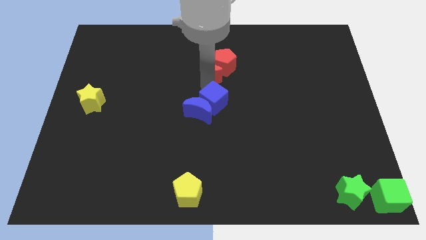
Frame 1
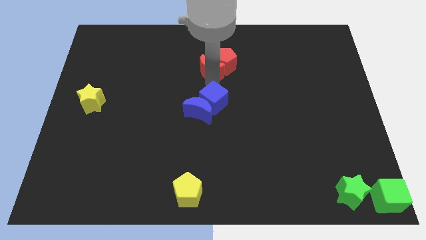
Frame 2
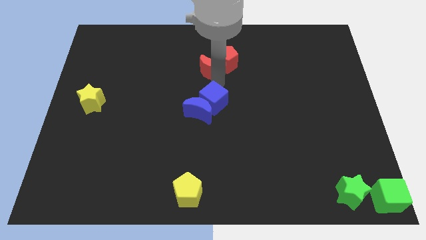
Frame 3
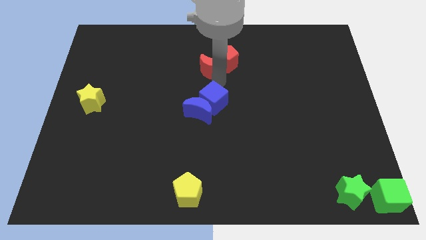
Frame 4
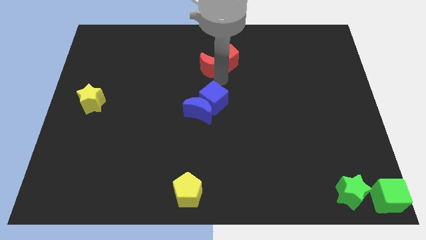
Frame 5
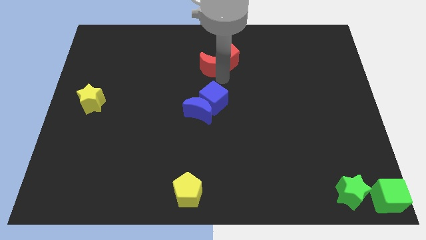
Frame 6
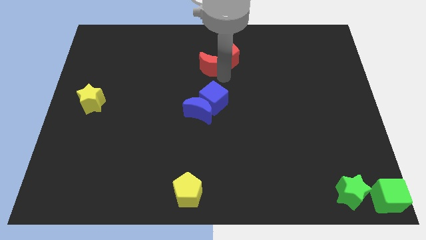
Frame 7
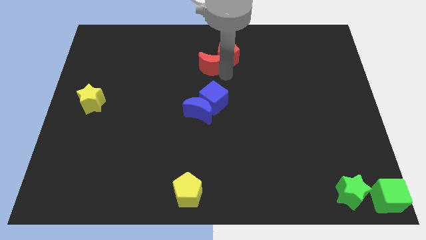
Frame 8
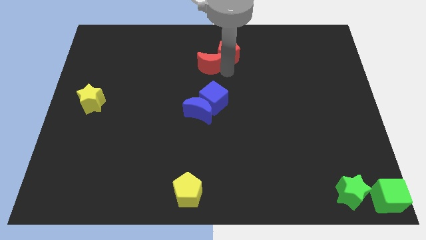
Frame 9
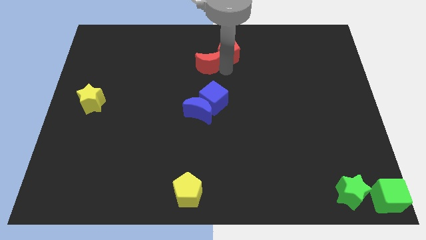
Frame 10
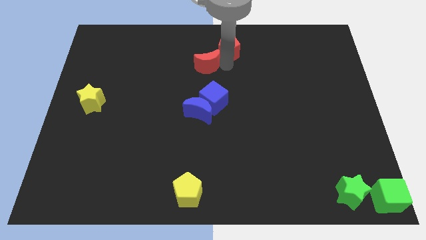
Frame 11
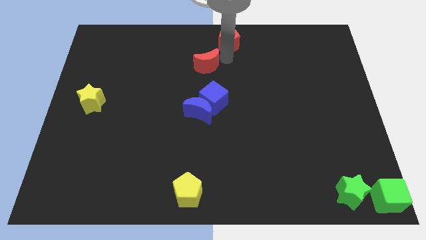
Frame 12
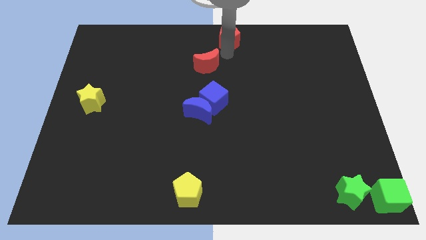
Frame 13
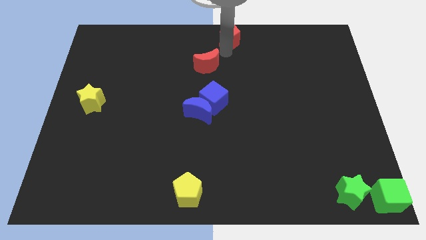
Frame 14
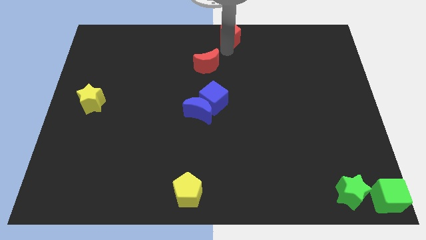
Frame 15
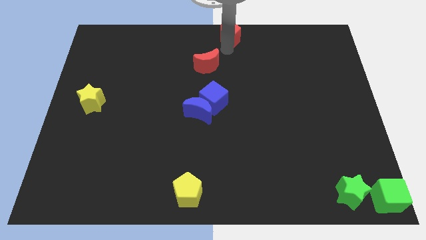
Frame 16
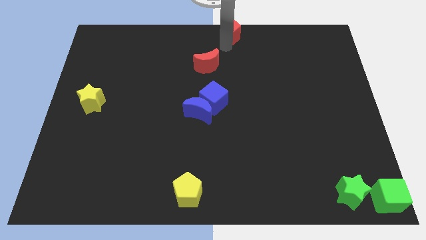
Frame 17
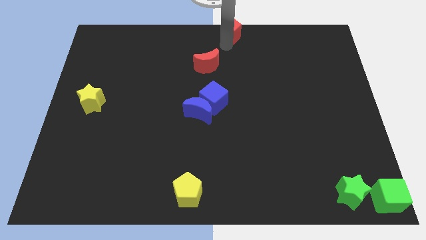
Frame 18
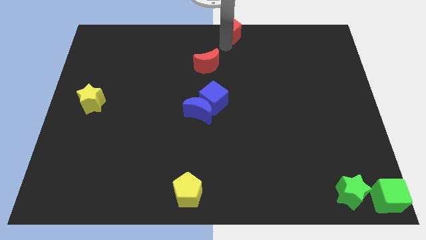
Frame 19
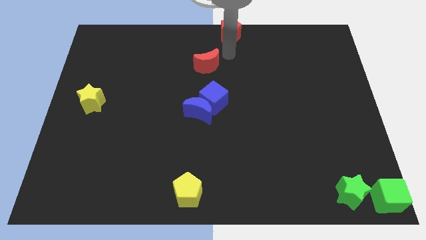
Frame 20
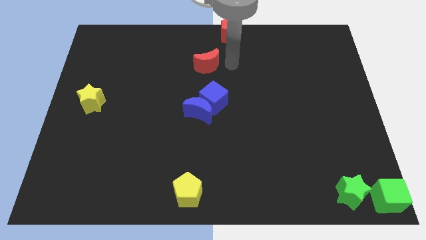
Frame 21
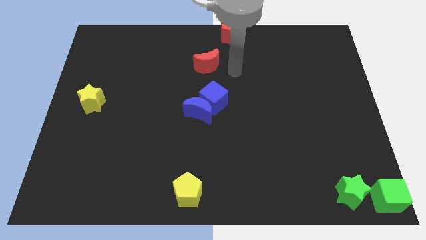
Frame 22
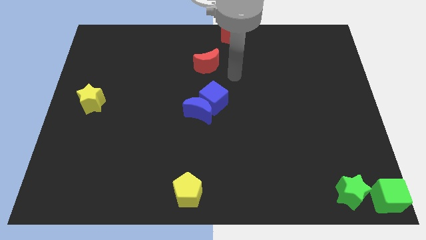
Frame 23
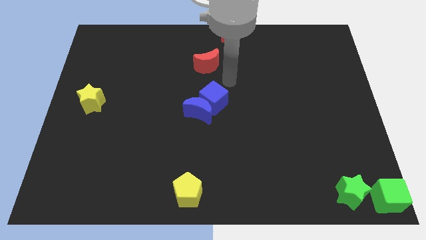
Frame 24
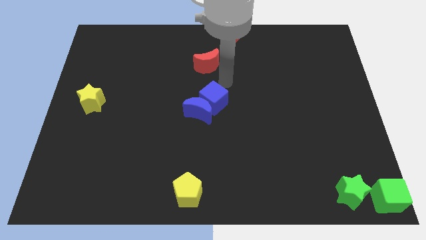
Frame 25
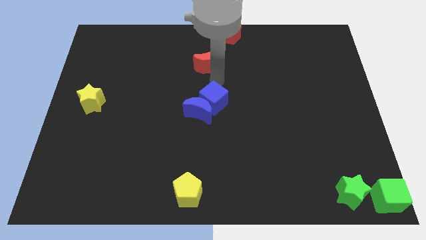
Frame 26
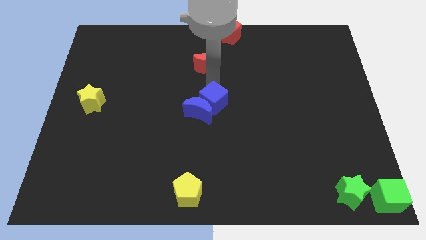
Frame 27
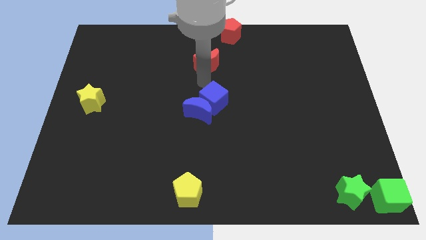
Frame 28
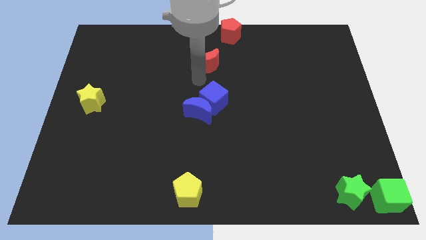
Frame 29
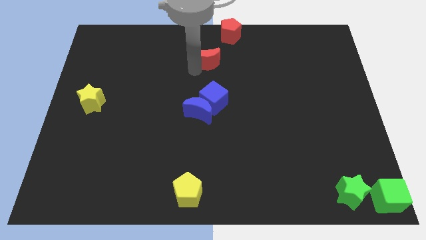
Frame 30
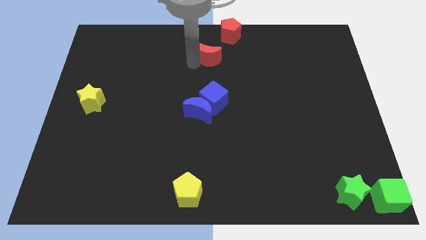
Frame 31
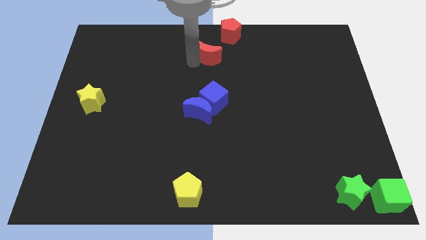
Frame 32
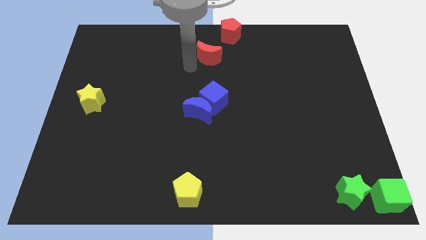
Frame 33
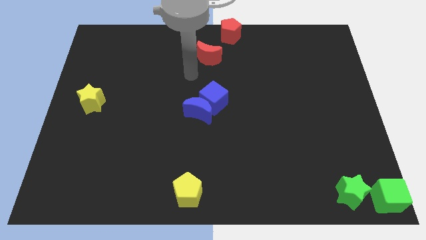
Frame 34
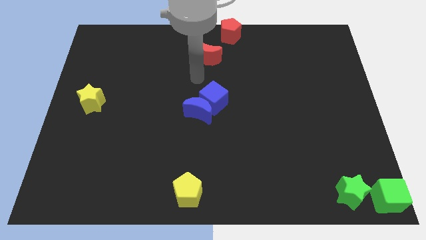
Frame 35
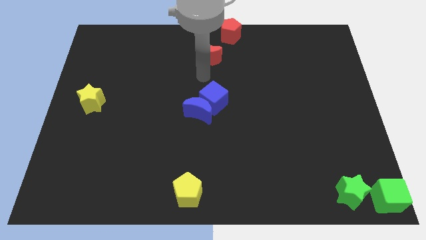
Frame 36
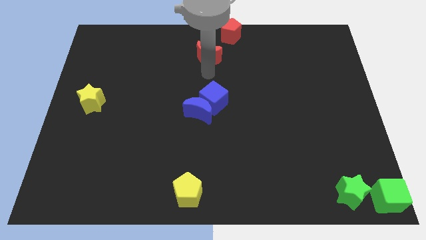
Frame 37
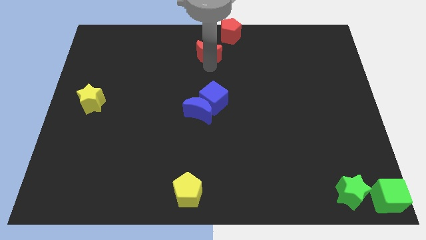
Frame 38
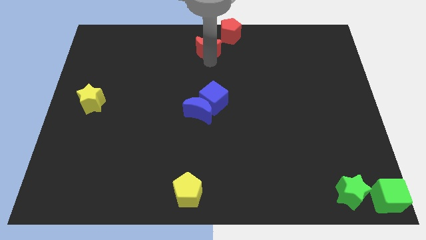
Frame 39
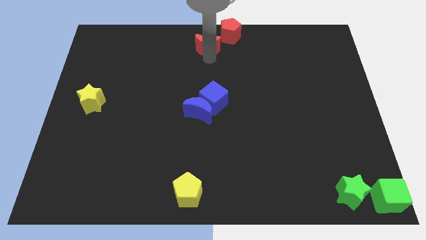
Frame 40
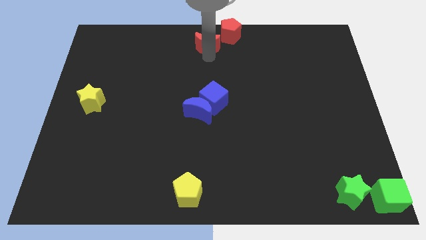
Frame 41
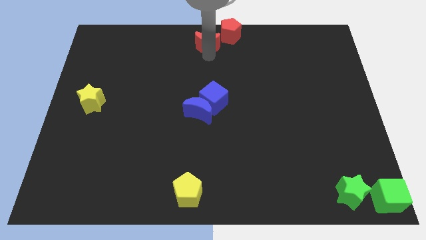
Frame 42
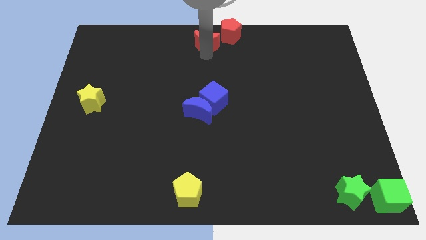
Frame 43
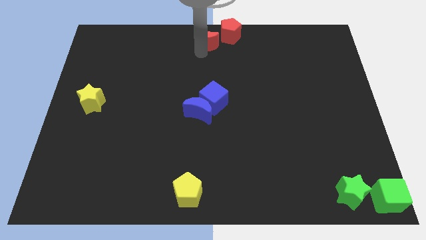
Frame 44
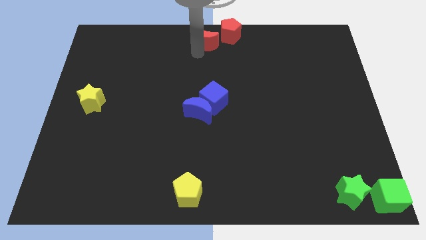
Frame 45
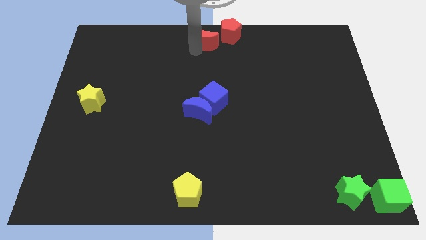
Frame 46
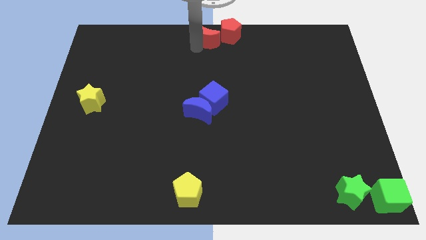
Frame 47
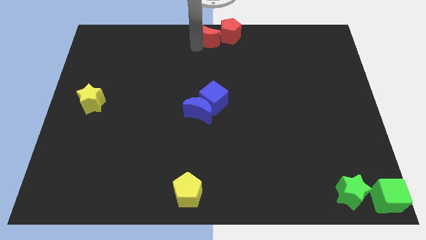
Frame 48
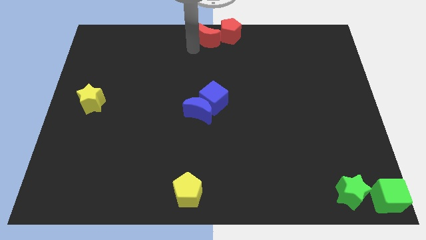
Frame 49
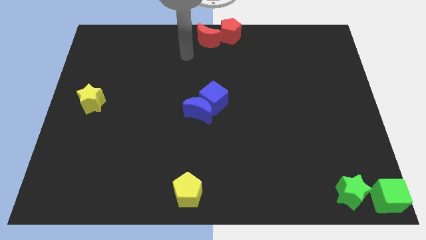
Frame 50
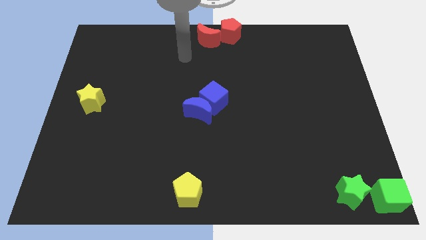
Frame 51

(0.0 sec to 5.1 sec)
push the red blocks to the top center of the board

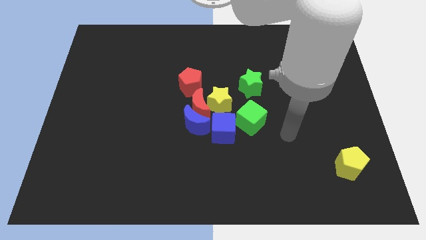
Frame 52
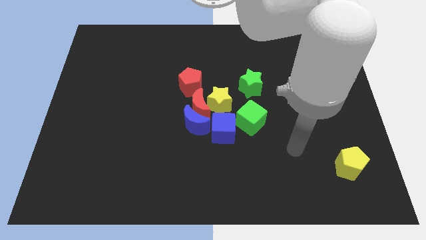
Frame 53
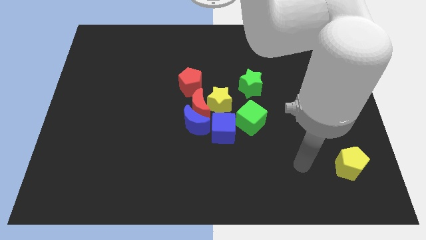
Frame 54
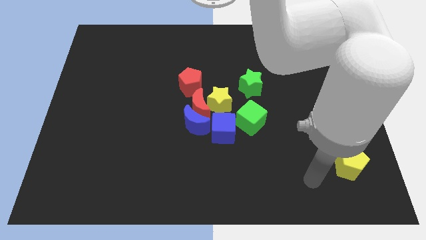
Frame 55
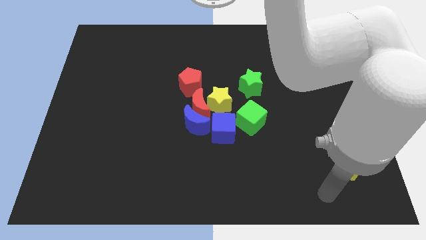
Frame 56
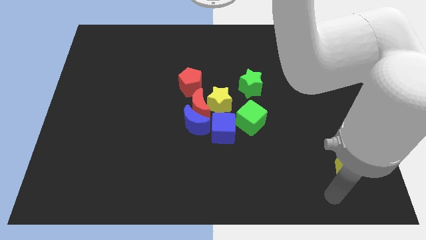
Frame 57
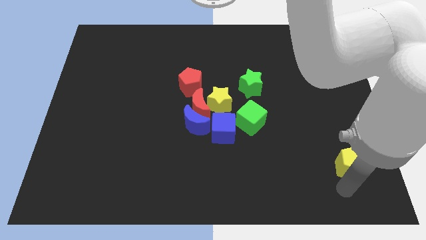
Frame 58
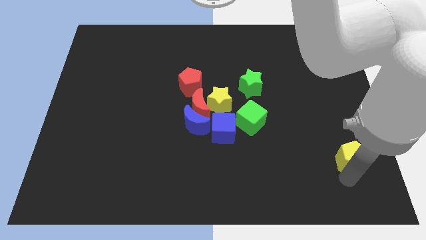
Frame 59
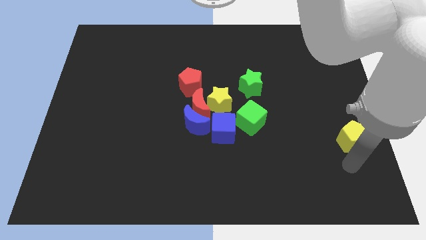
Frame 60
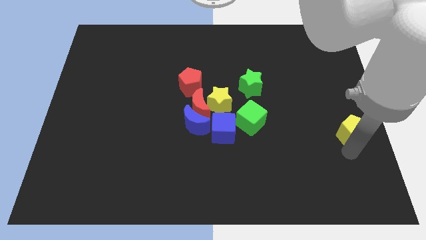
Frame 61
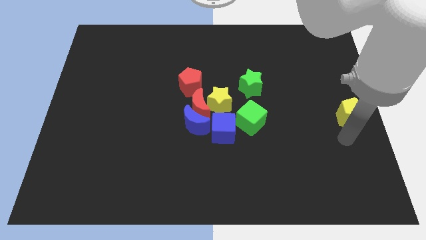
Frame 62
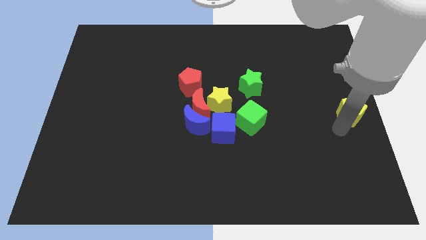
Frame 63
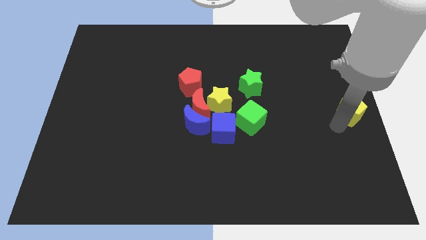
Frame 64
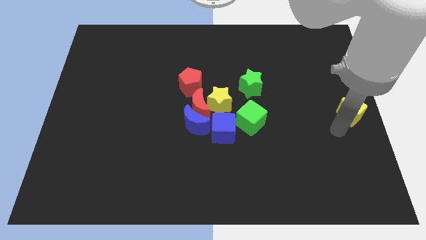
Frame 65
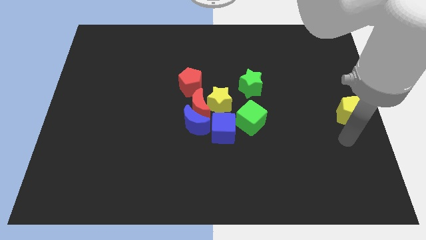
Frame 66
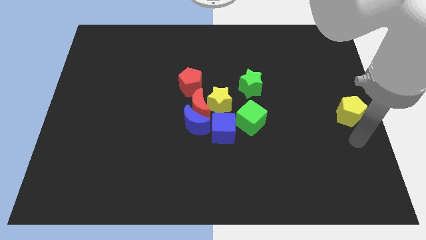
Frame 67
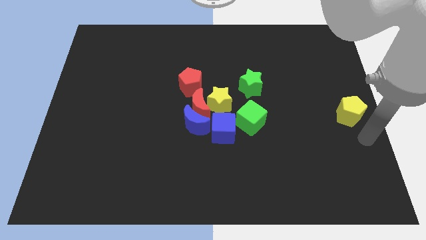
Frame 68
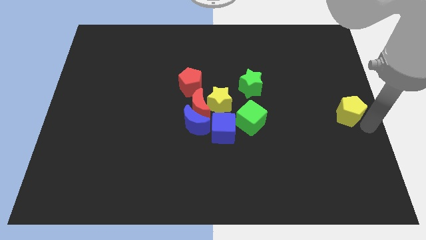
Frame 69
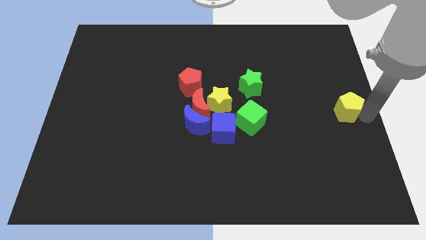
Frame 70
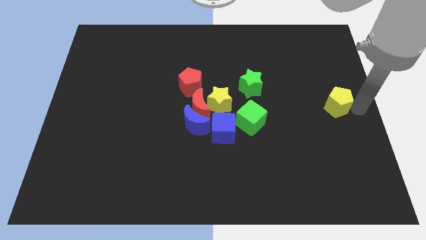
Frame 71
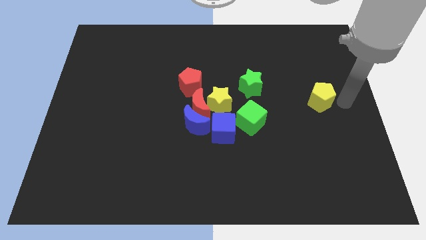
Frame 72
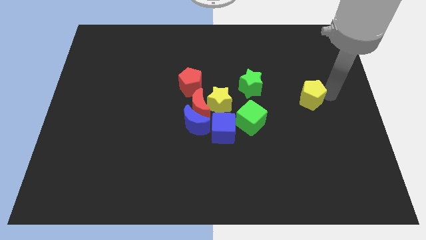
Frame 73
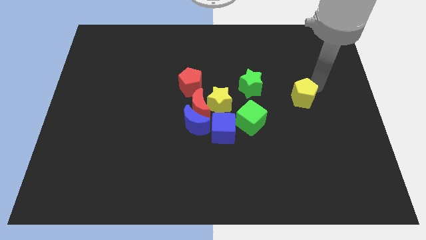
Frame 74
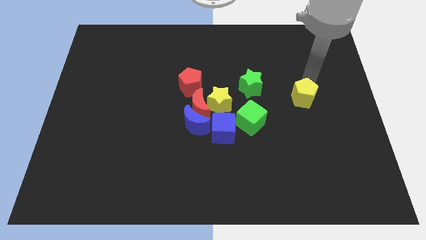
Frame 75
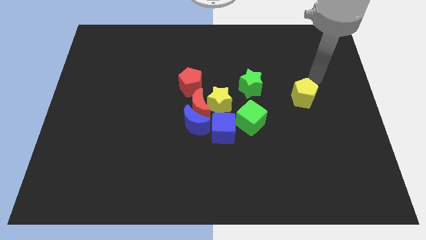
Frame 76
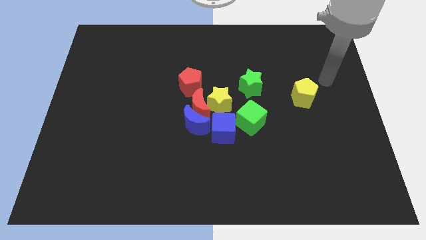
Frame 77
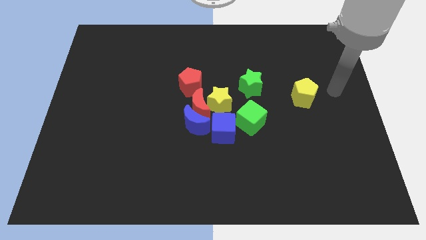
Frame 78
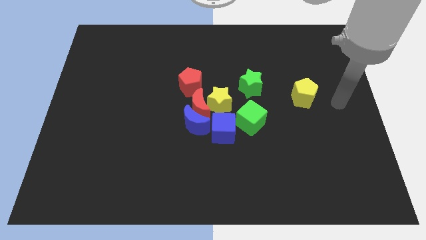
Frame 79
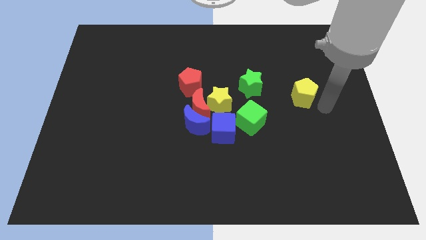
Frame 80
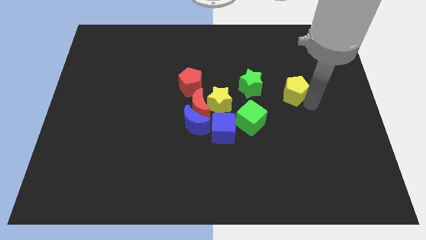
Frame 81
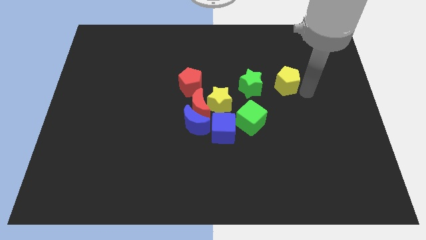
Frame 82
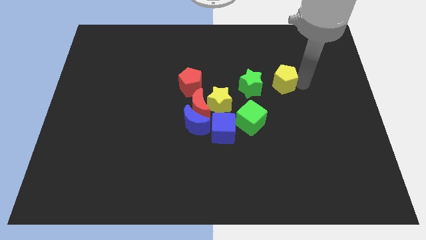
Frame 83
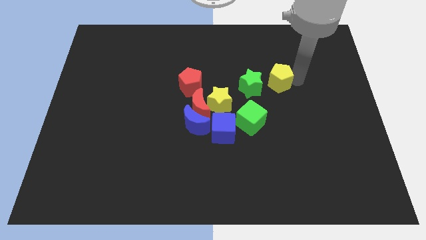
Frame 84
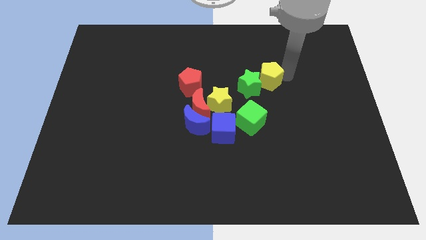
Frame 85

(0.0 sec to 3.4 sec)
slide the yellow pentagon into the right side of the green star

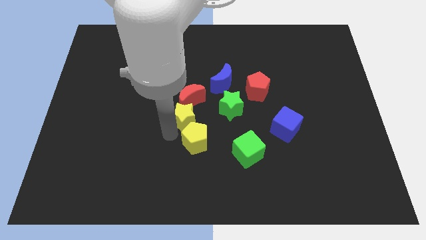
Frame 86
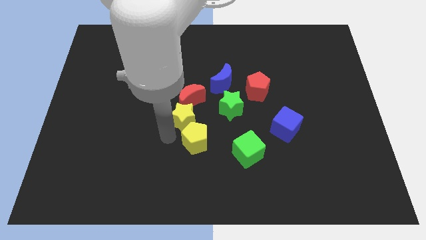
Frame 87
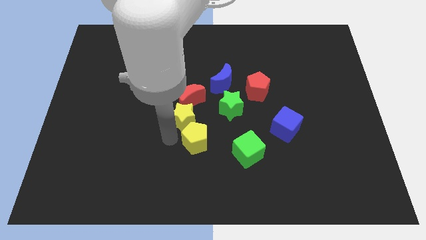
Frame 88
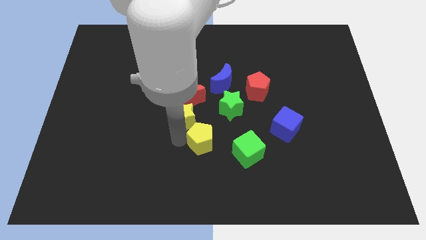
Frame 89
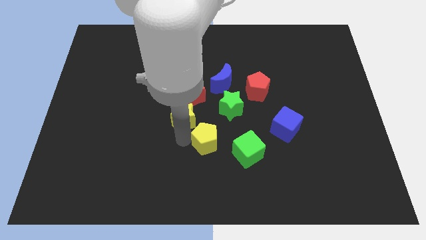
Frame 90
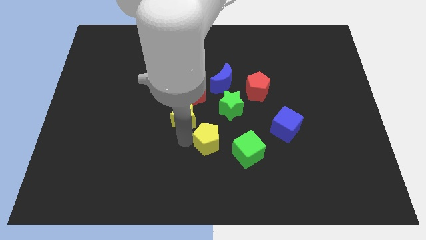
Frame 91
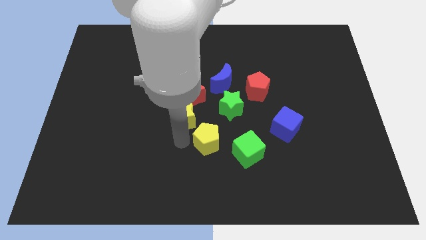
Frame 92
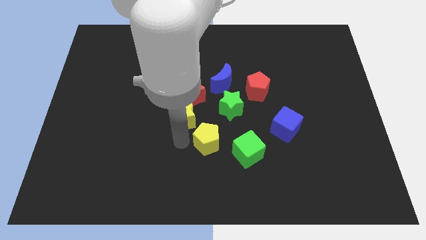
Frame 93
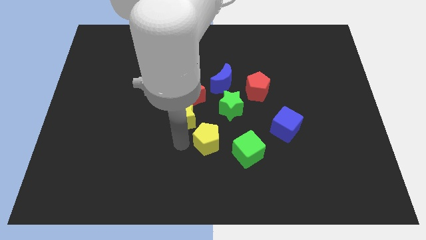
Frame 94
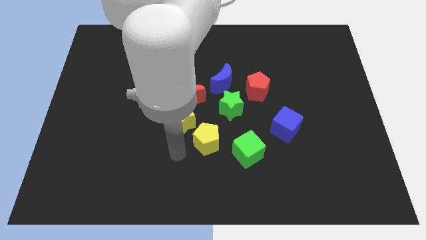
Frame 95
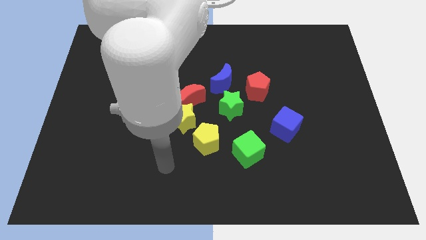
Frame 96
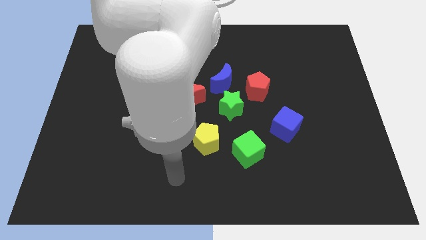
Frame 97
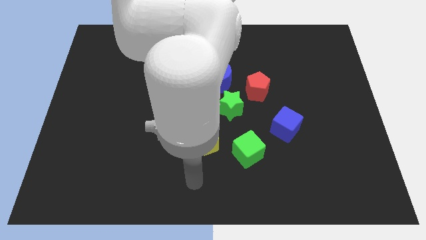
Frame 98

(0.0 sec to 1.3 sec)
move the yellow pentagon slightly to the right
